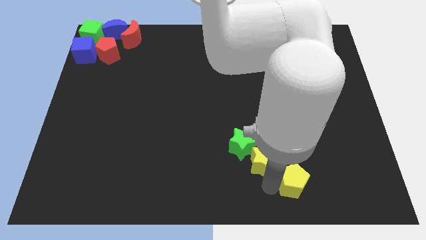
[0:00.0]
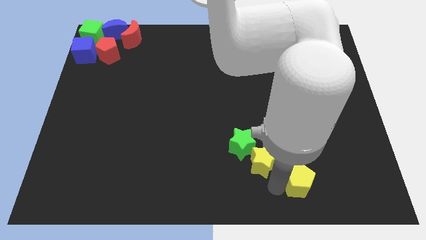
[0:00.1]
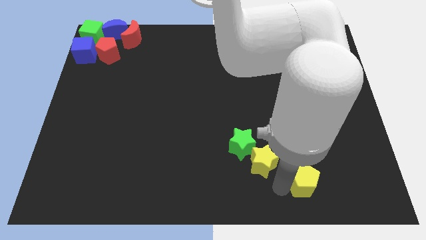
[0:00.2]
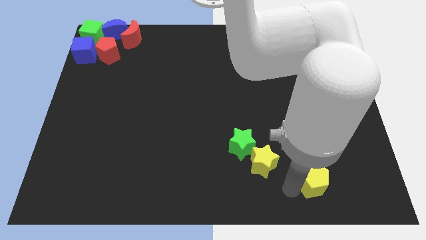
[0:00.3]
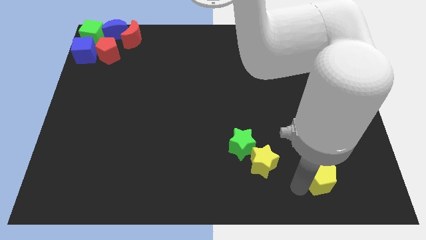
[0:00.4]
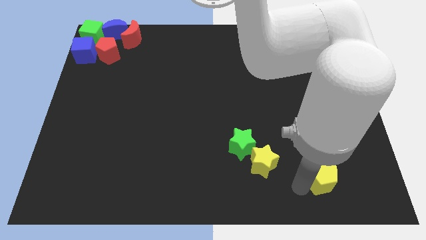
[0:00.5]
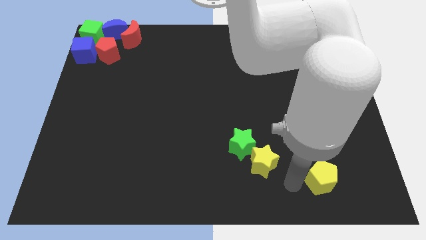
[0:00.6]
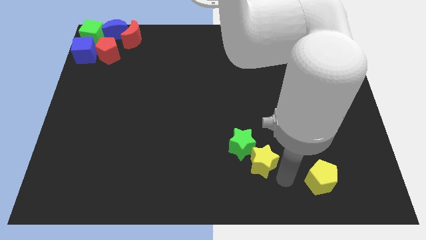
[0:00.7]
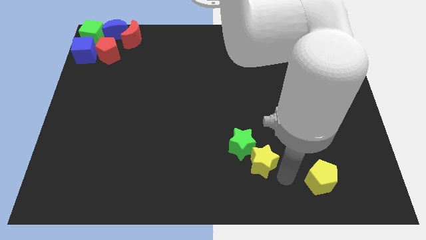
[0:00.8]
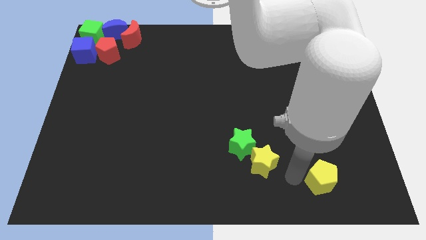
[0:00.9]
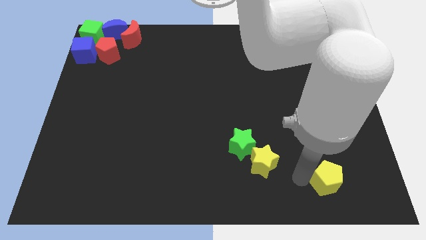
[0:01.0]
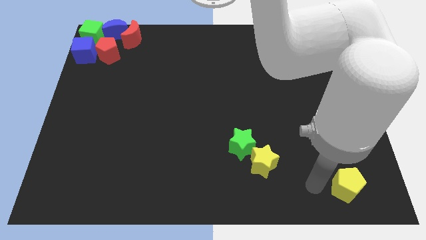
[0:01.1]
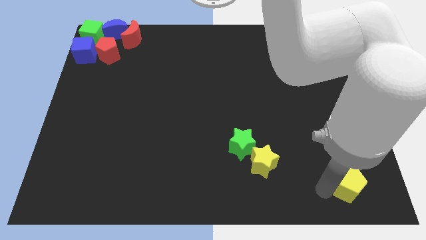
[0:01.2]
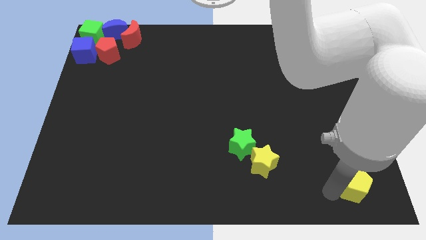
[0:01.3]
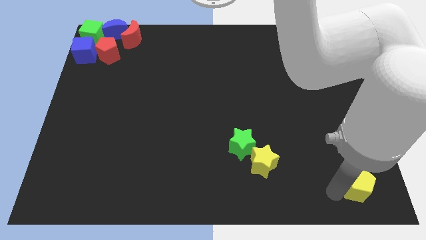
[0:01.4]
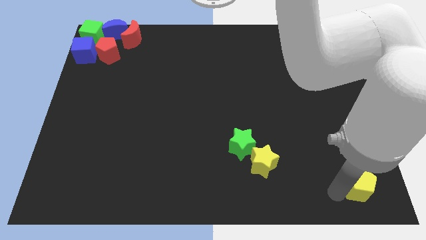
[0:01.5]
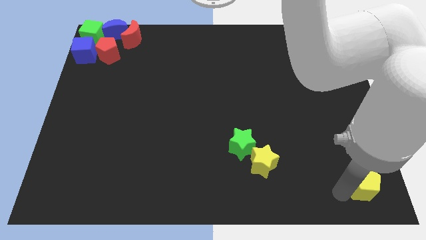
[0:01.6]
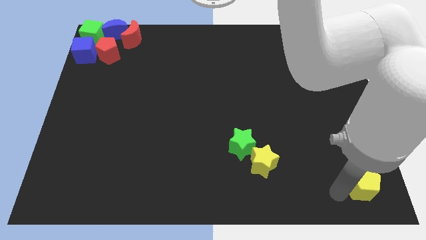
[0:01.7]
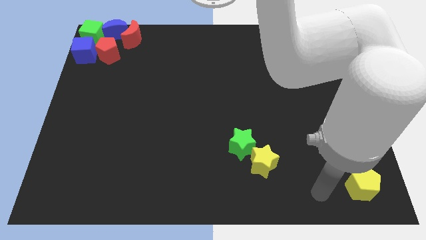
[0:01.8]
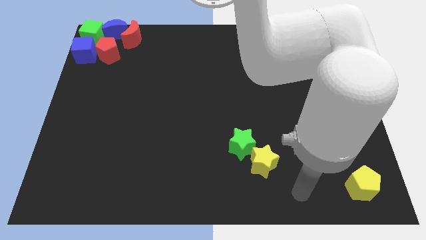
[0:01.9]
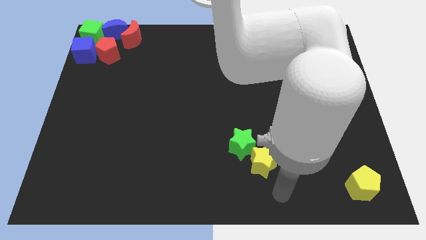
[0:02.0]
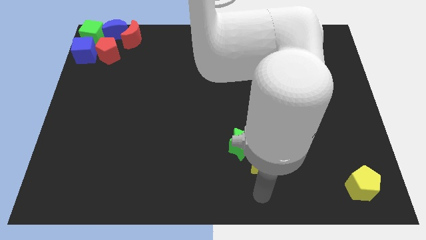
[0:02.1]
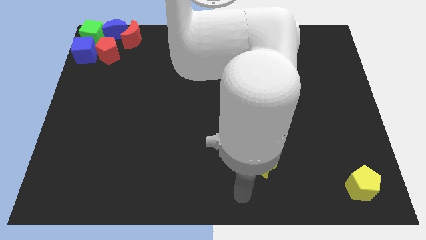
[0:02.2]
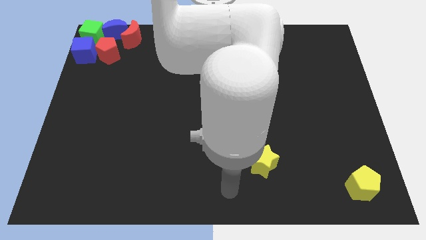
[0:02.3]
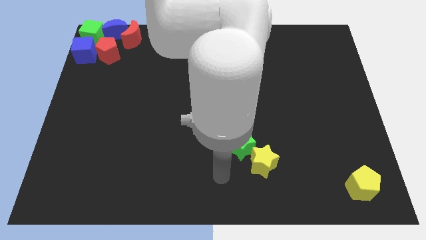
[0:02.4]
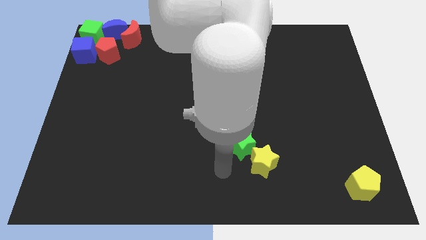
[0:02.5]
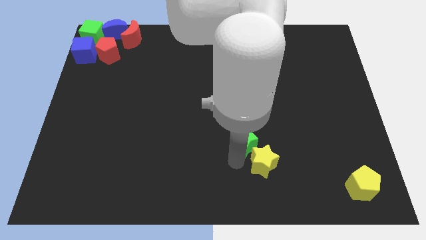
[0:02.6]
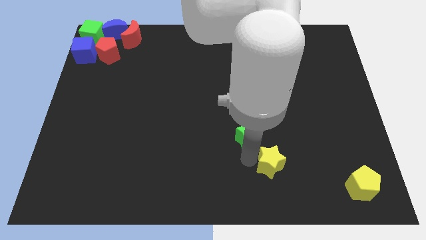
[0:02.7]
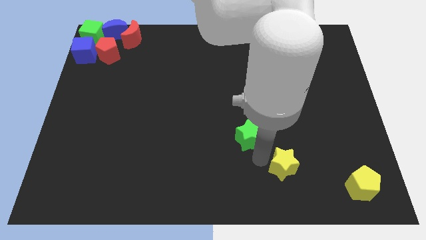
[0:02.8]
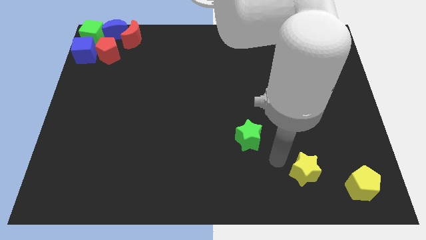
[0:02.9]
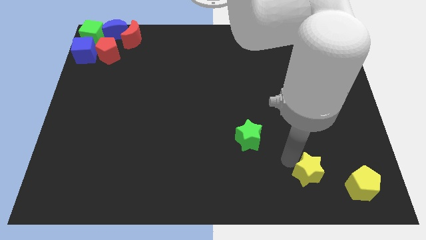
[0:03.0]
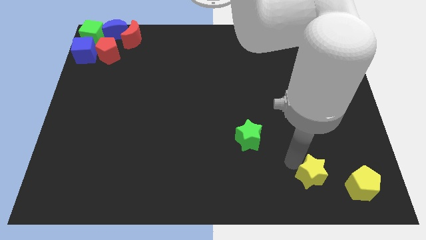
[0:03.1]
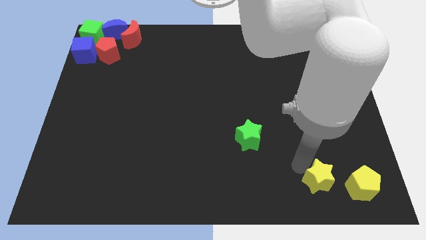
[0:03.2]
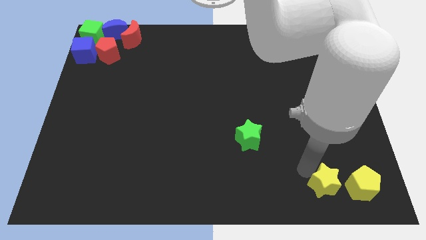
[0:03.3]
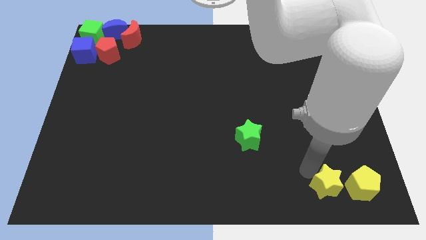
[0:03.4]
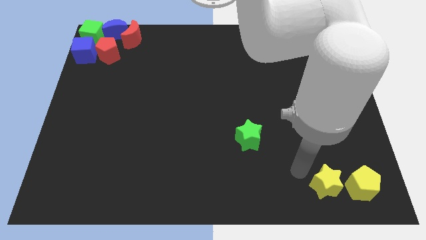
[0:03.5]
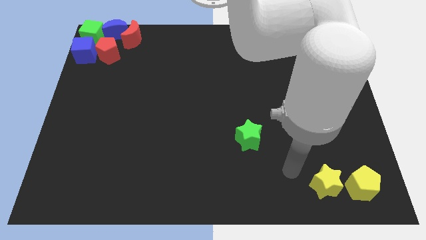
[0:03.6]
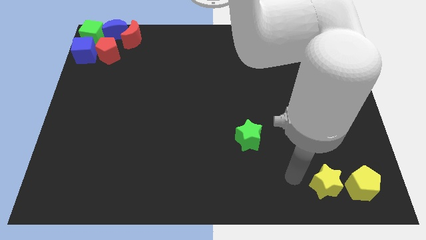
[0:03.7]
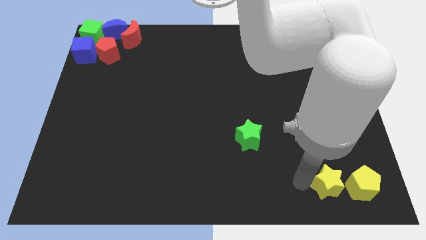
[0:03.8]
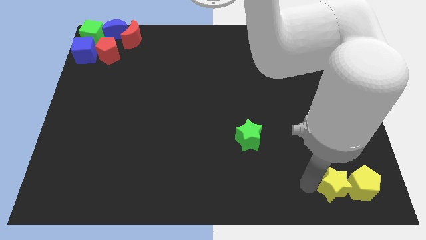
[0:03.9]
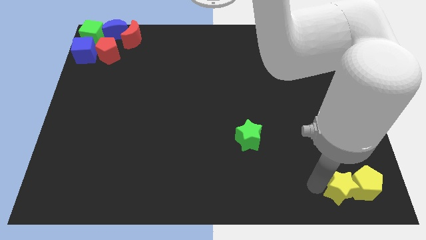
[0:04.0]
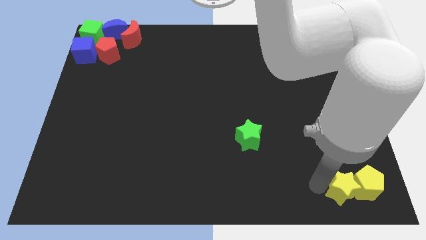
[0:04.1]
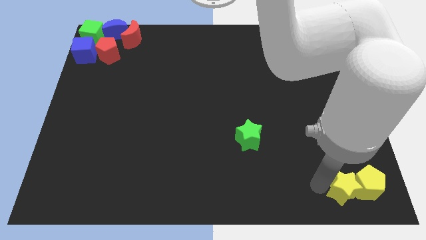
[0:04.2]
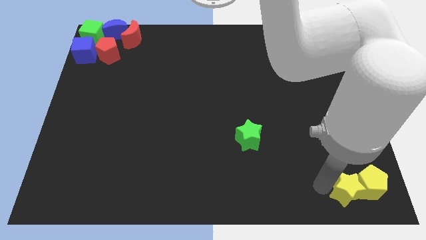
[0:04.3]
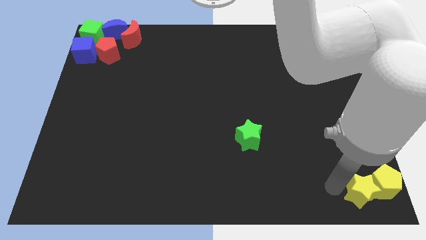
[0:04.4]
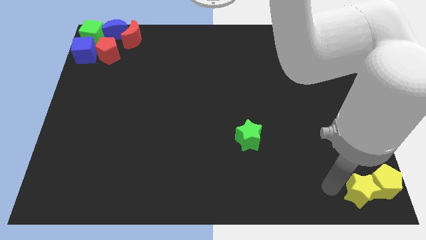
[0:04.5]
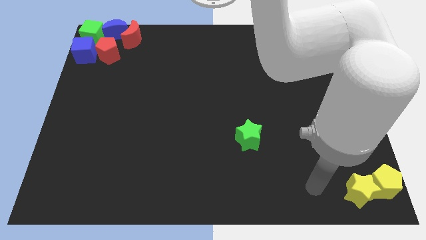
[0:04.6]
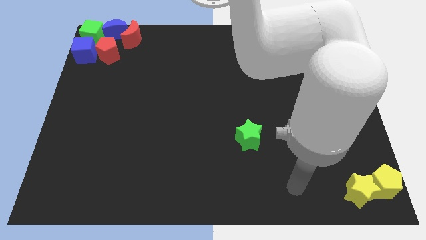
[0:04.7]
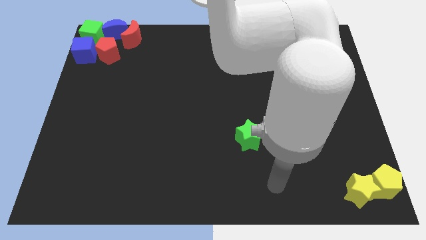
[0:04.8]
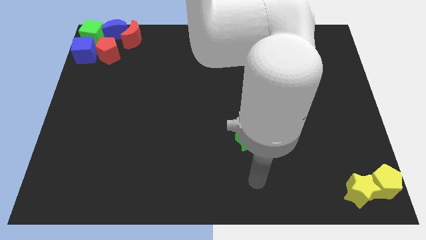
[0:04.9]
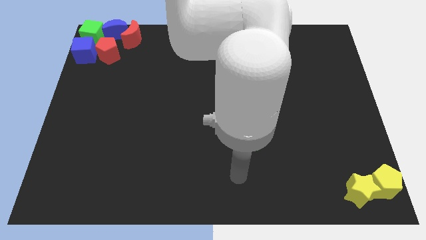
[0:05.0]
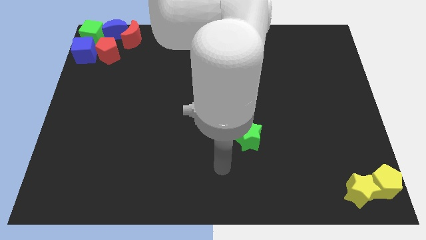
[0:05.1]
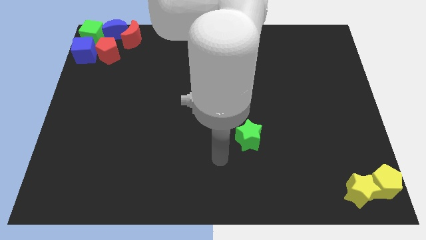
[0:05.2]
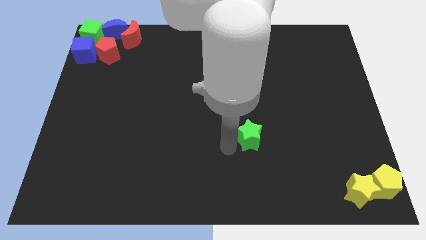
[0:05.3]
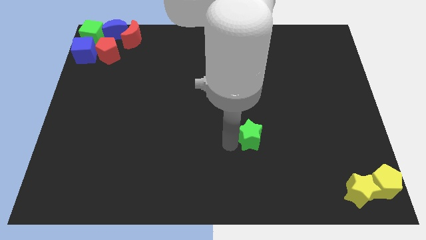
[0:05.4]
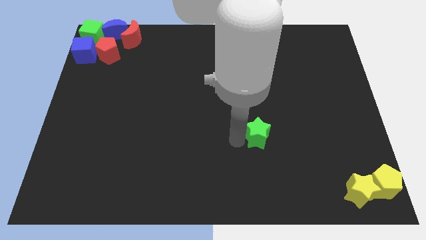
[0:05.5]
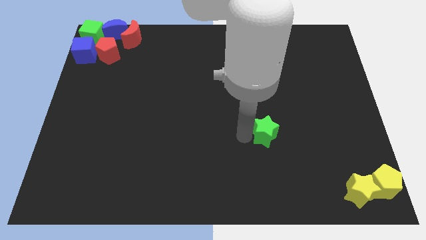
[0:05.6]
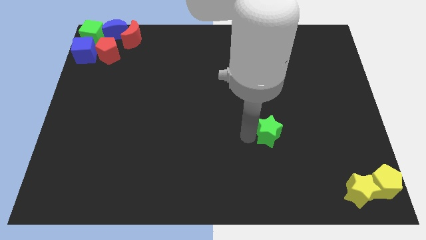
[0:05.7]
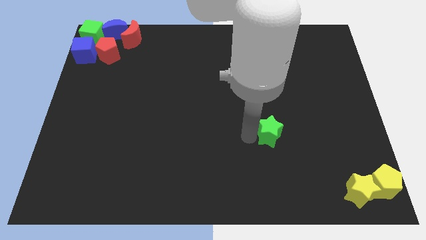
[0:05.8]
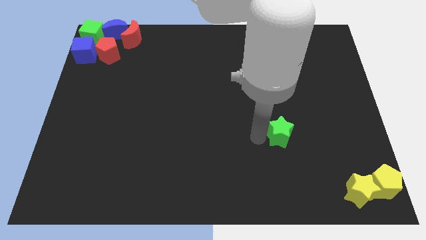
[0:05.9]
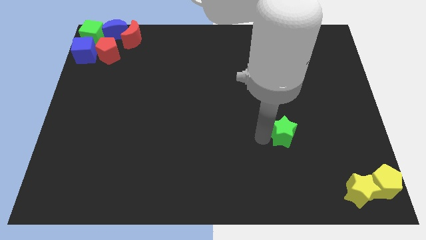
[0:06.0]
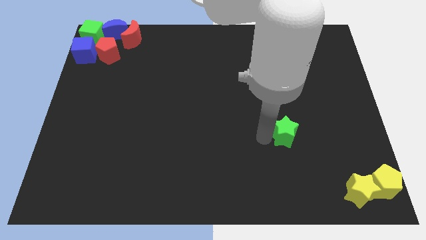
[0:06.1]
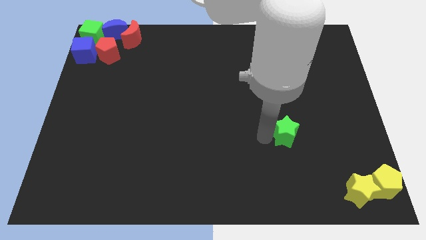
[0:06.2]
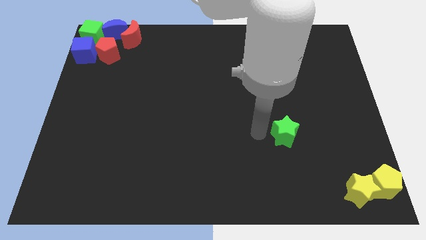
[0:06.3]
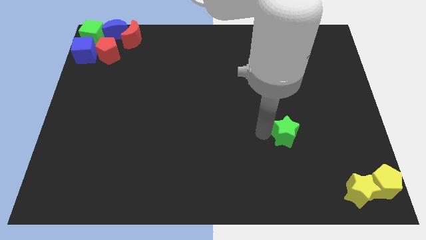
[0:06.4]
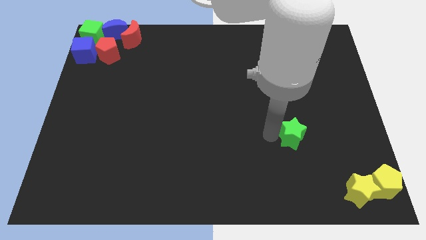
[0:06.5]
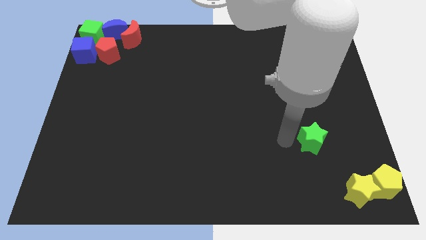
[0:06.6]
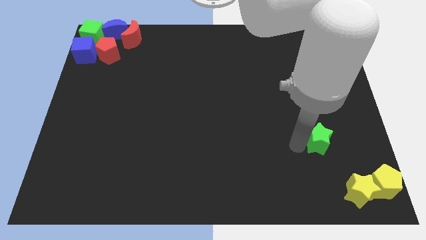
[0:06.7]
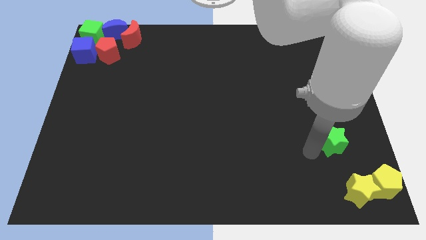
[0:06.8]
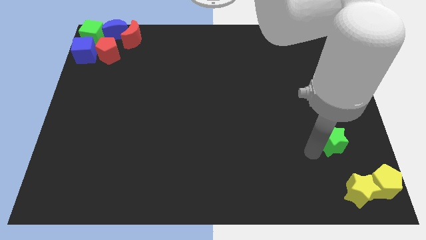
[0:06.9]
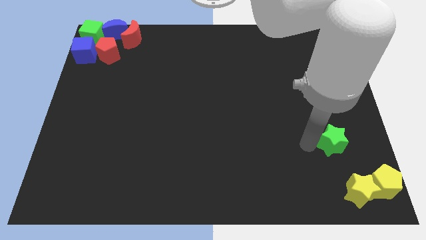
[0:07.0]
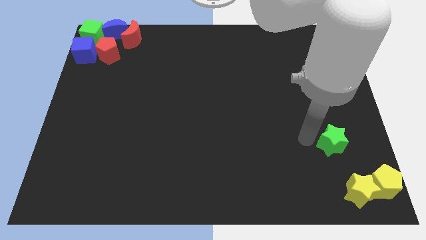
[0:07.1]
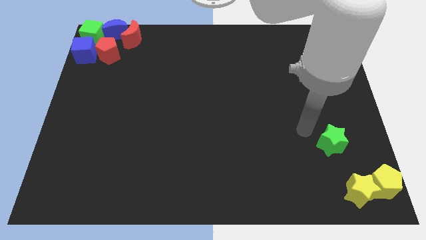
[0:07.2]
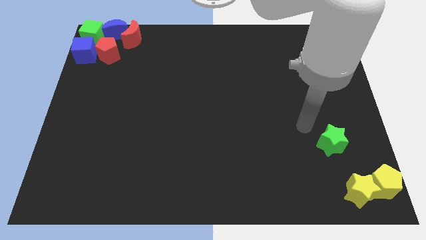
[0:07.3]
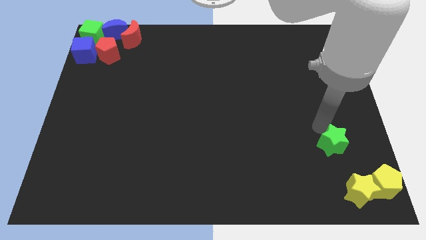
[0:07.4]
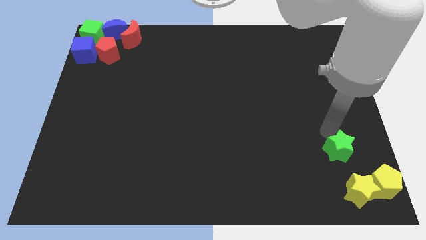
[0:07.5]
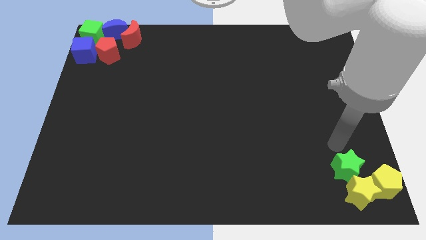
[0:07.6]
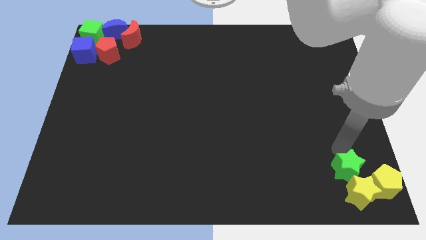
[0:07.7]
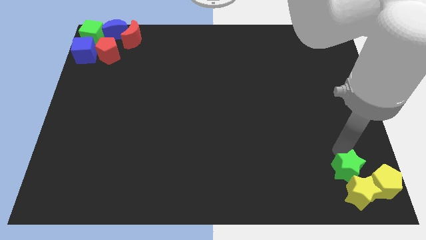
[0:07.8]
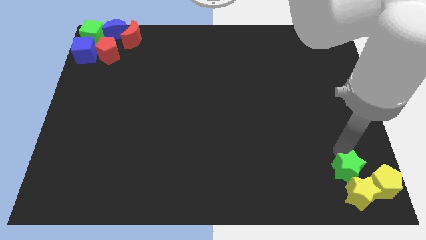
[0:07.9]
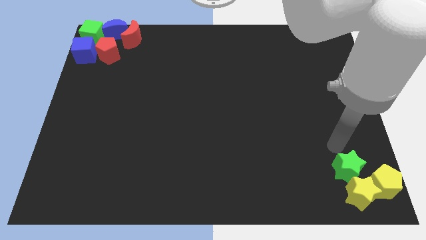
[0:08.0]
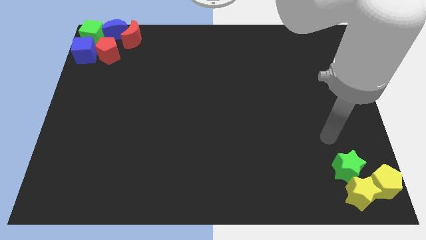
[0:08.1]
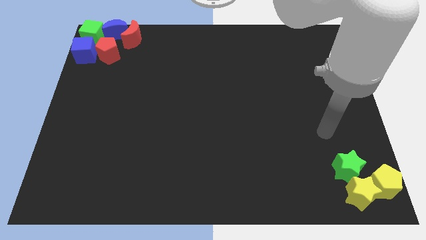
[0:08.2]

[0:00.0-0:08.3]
group up the yellow blocks and green star at the bottom right side of the table

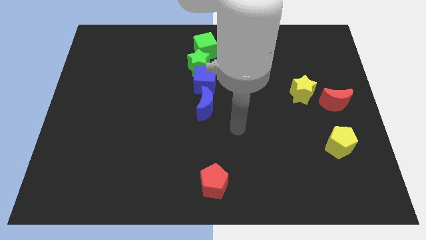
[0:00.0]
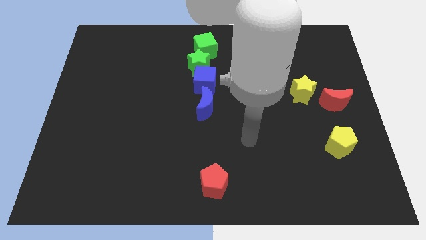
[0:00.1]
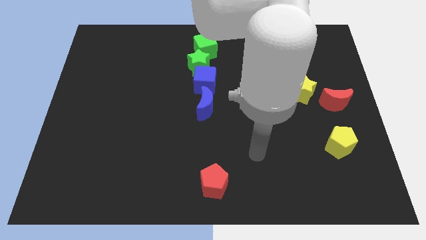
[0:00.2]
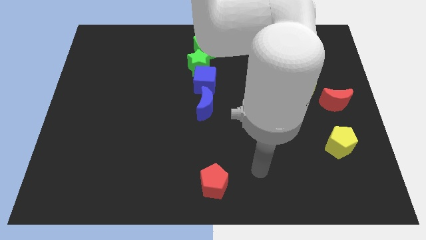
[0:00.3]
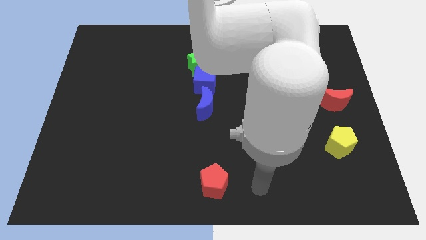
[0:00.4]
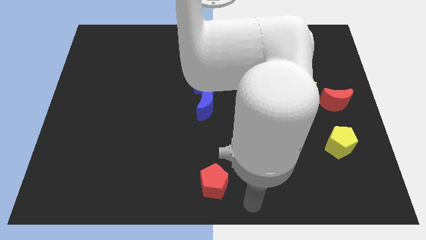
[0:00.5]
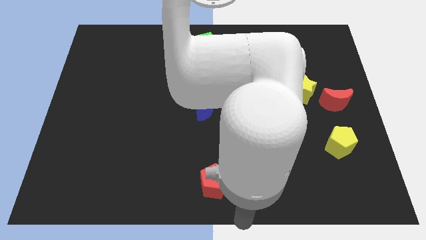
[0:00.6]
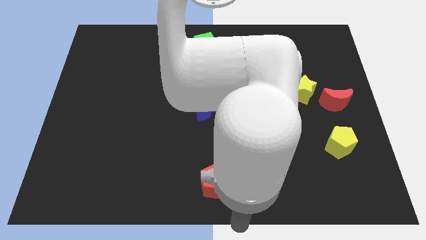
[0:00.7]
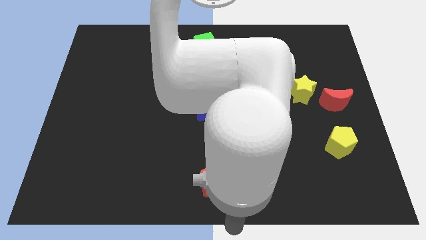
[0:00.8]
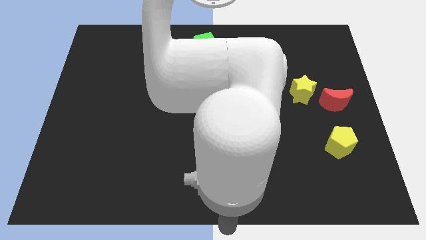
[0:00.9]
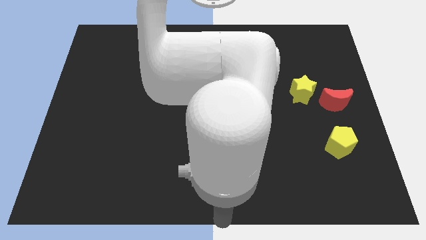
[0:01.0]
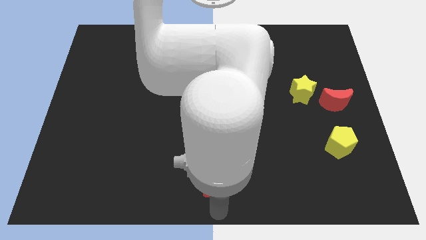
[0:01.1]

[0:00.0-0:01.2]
move the arm down to the red pentagon
